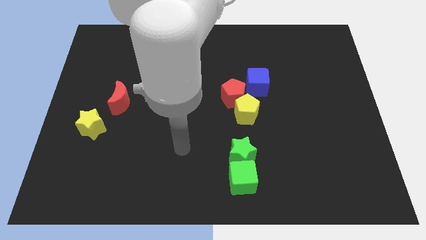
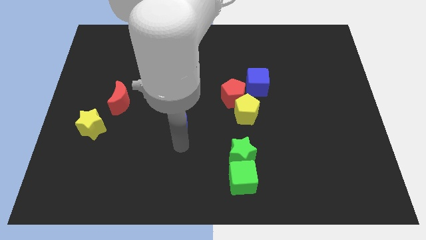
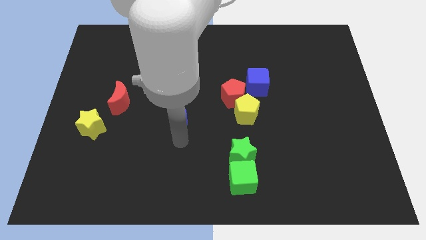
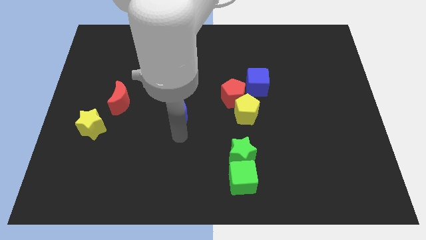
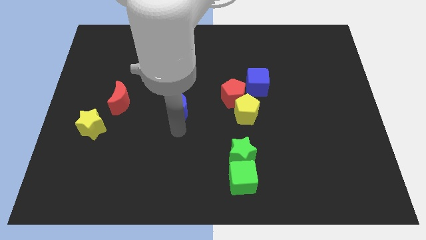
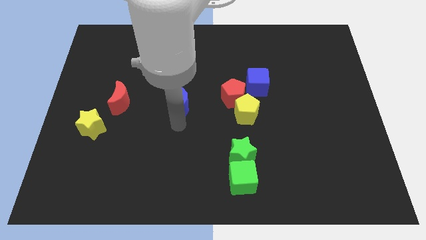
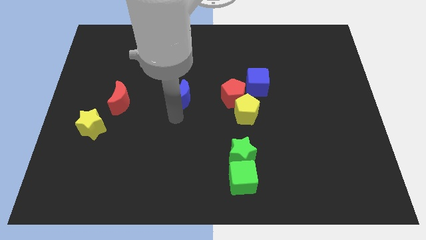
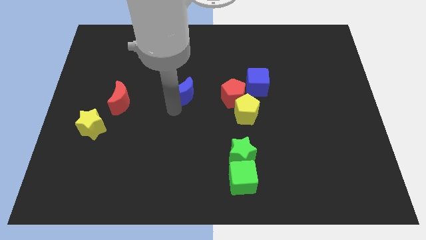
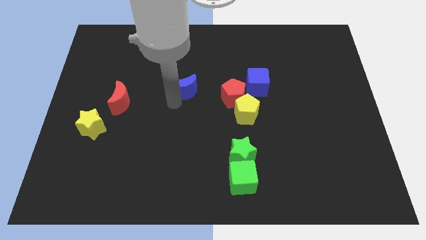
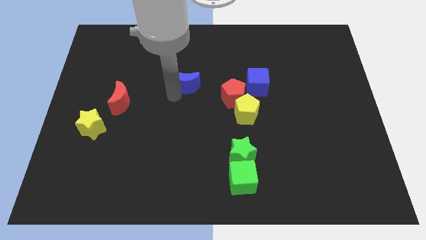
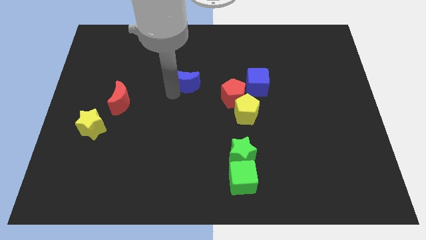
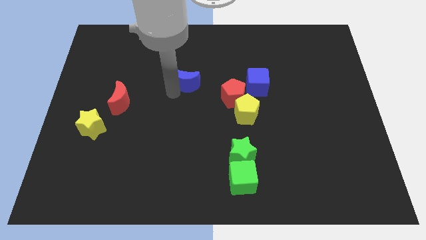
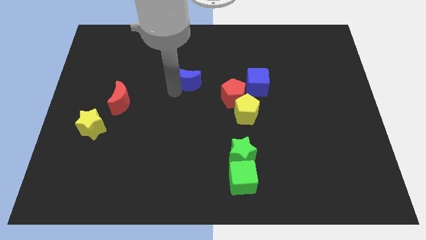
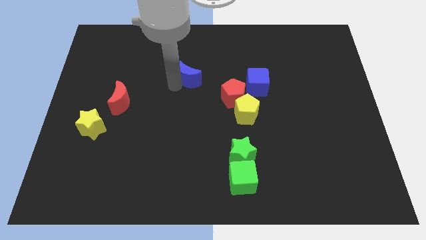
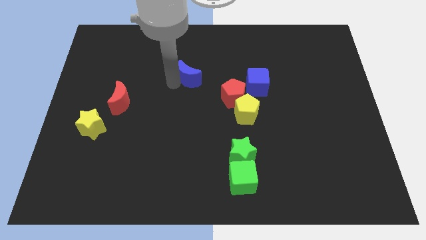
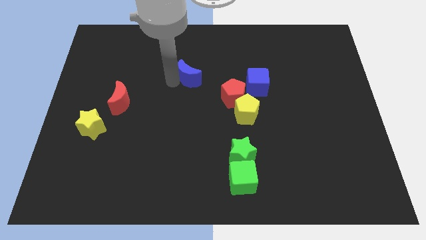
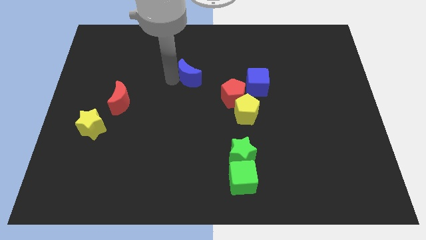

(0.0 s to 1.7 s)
move the blue crescent to the top

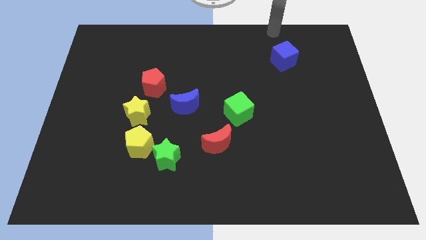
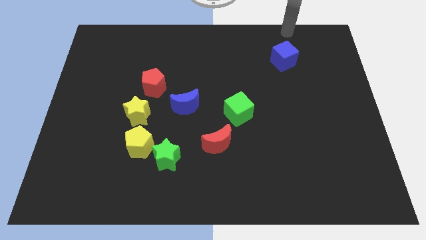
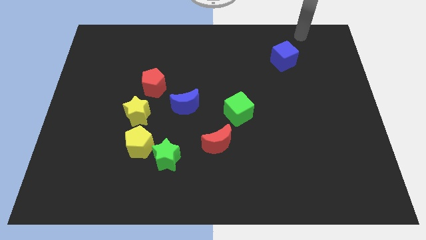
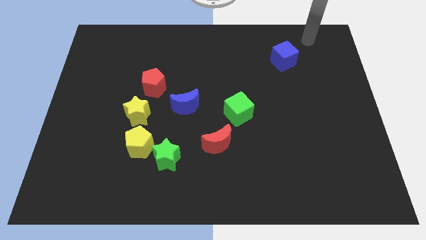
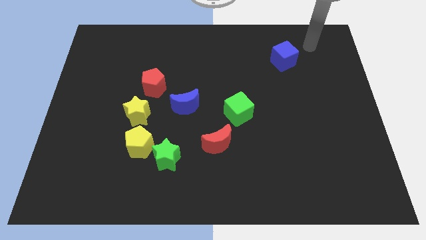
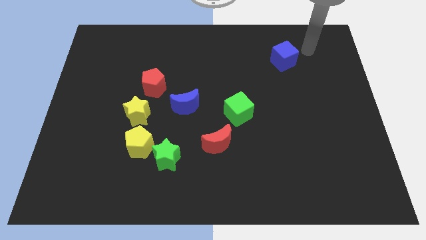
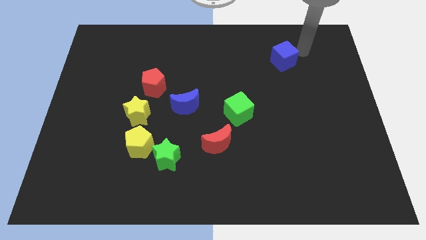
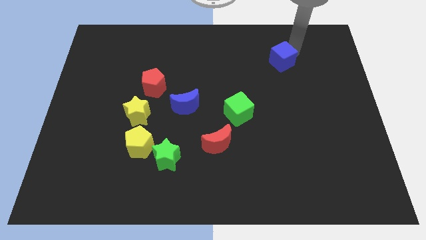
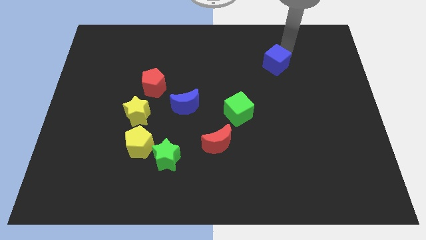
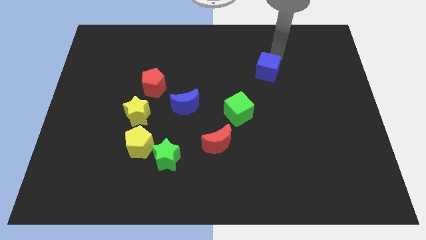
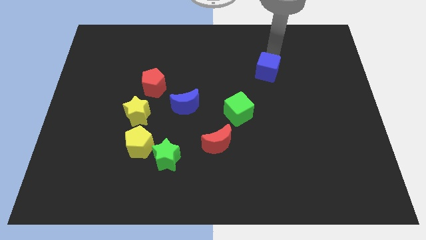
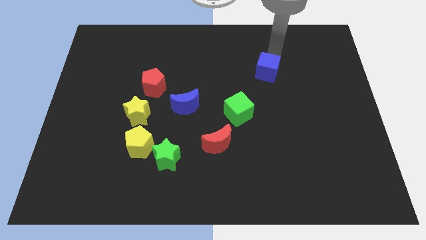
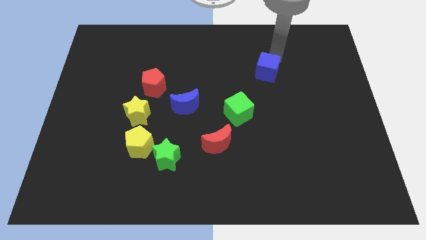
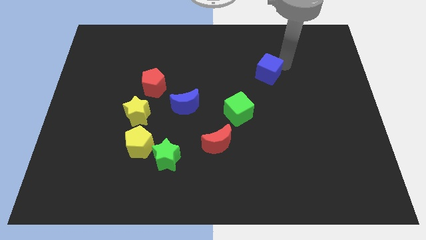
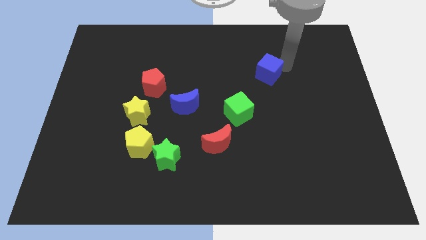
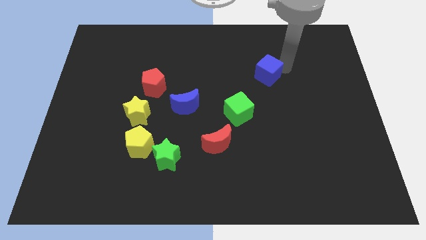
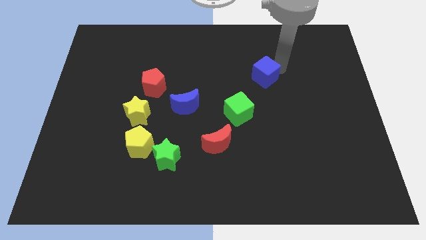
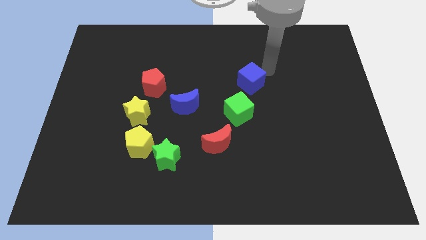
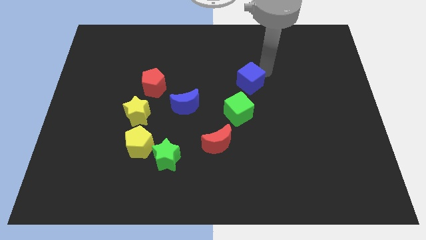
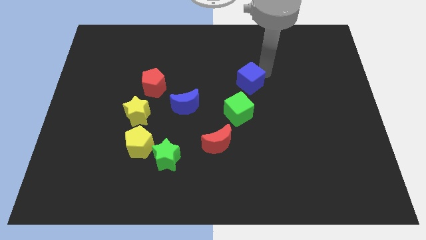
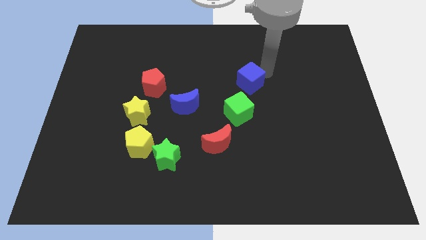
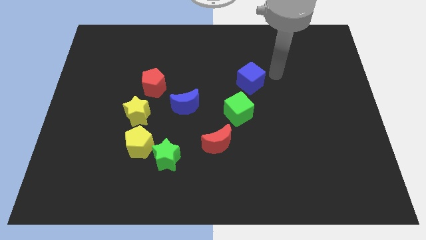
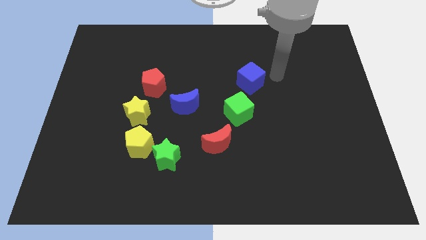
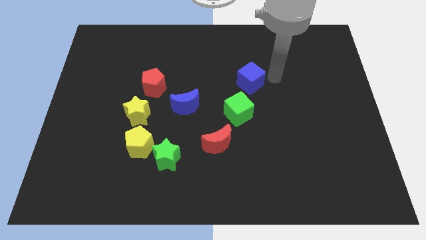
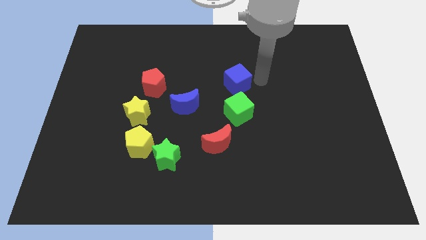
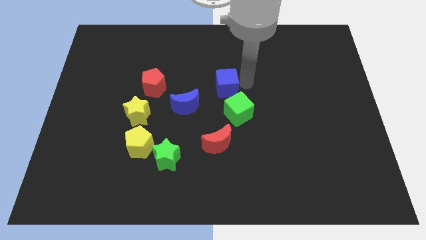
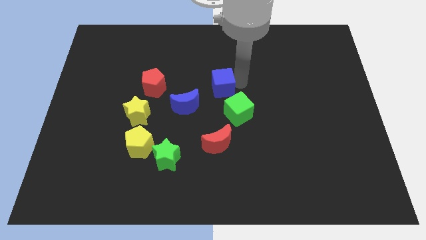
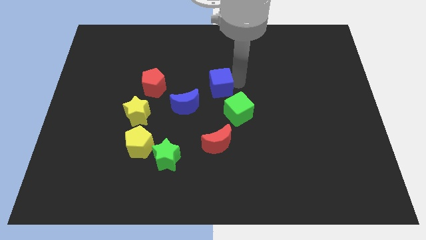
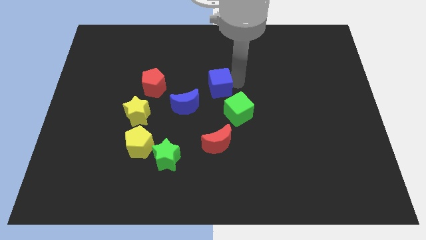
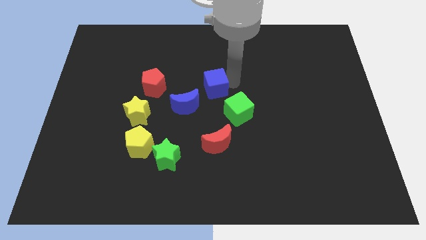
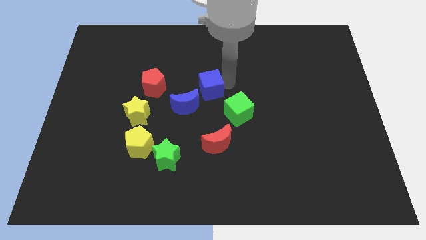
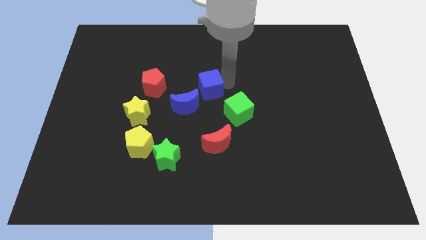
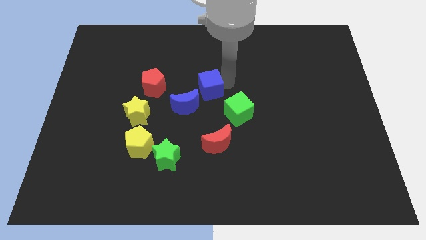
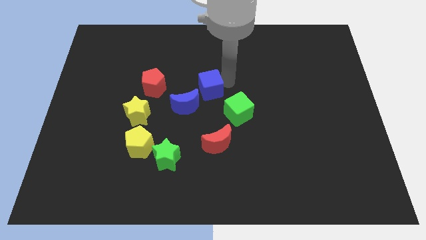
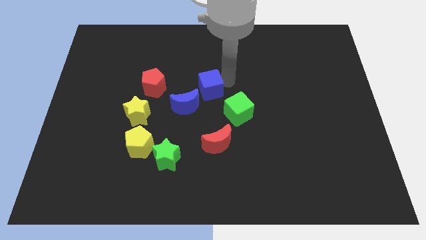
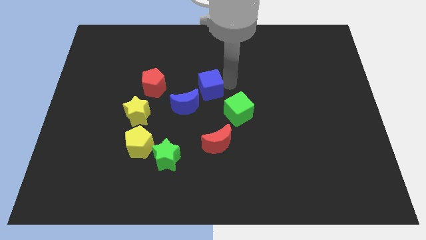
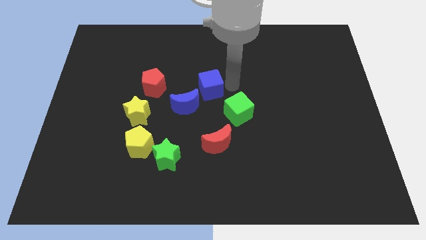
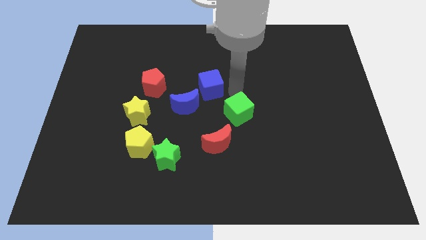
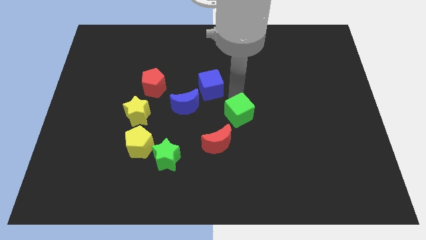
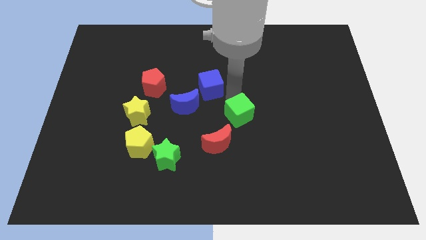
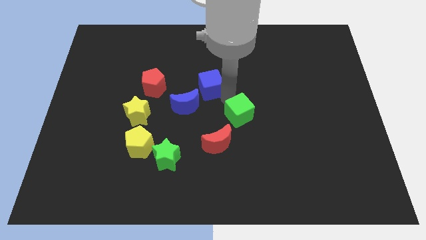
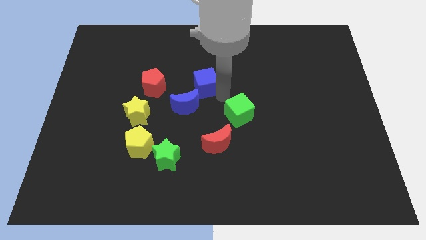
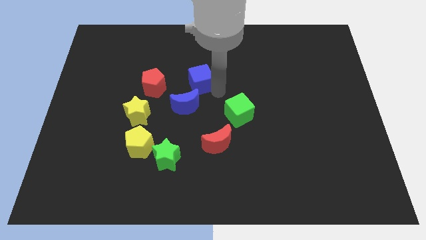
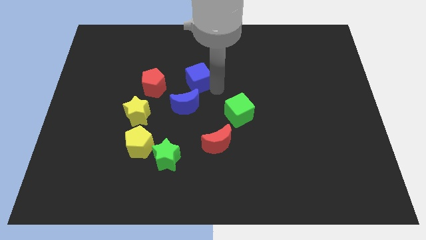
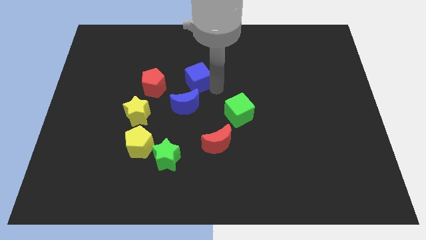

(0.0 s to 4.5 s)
move the blue cube to the top side of the blue moon

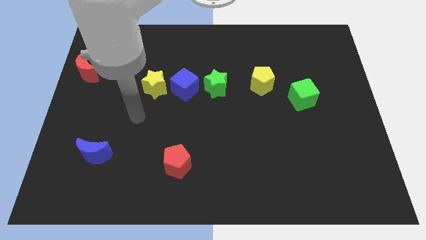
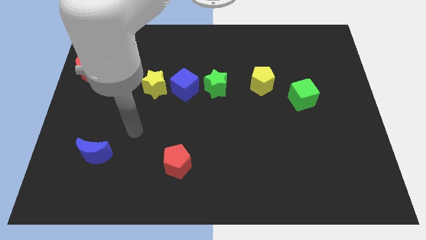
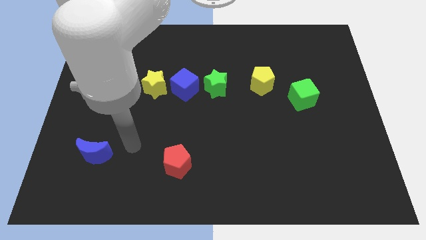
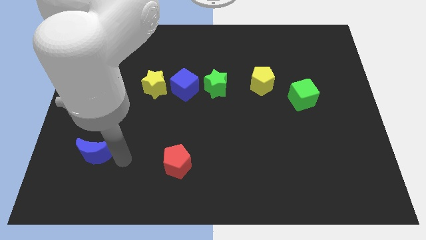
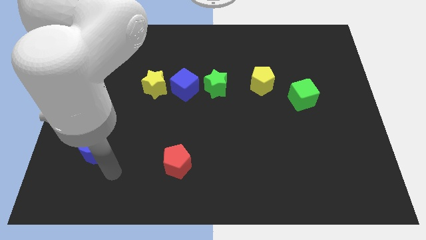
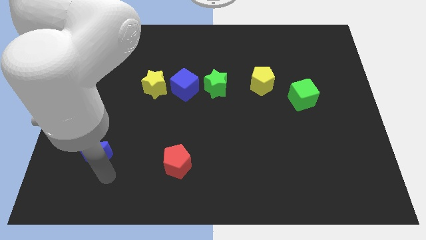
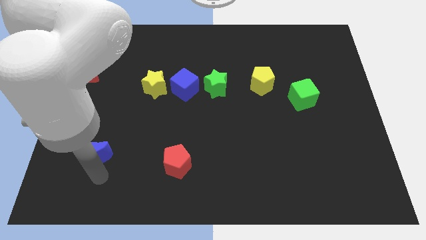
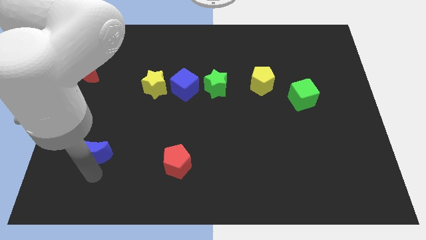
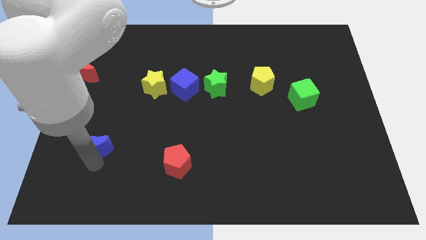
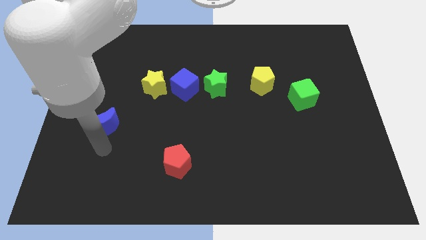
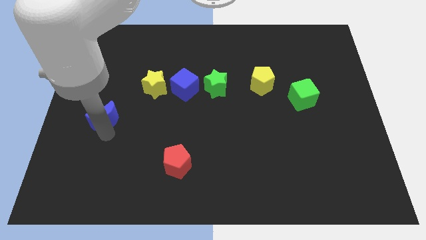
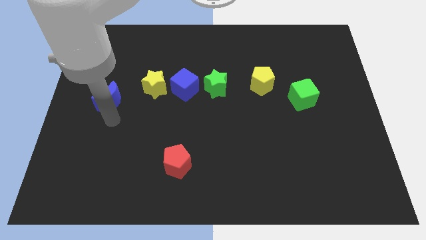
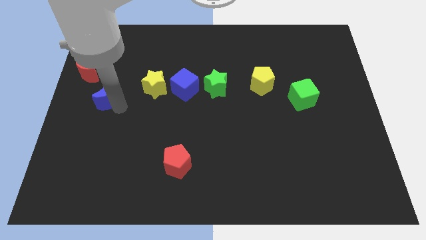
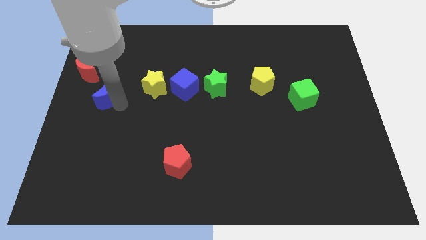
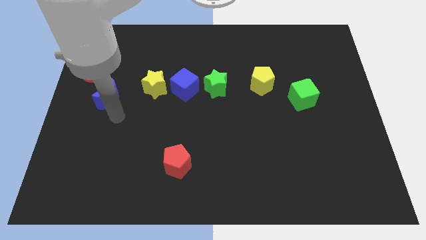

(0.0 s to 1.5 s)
push the blue moon diagonally top left to the red pentagon

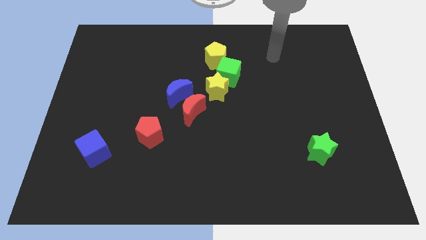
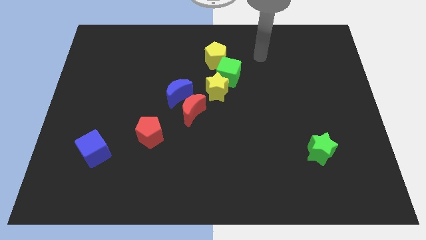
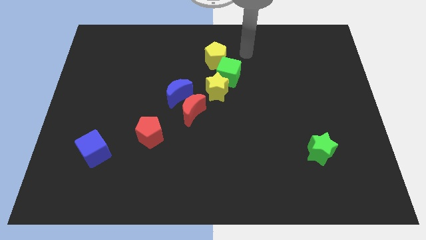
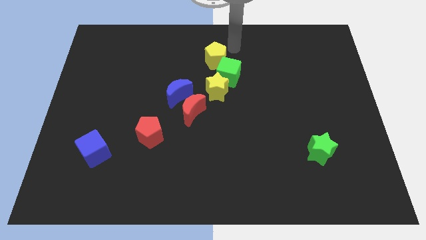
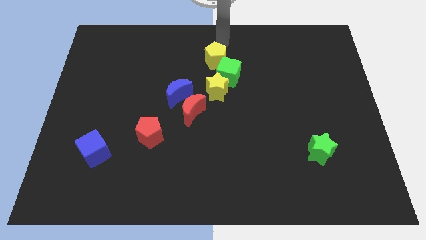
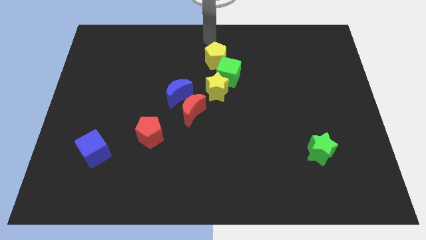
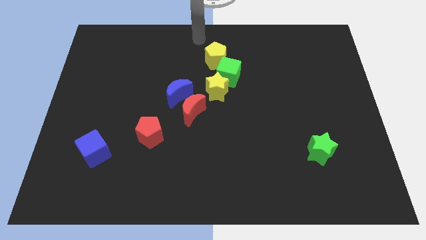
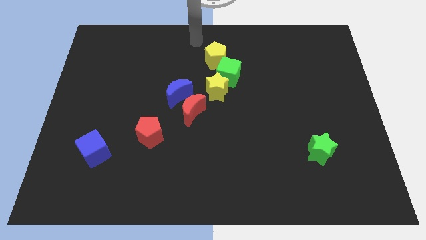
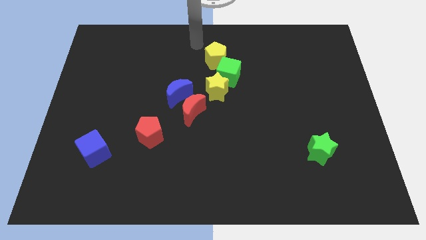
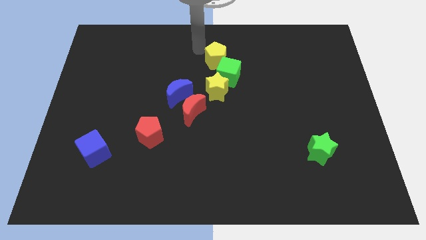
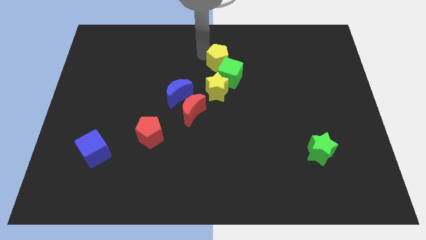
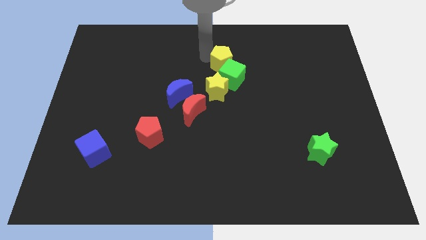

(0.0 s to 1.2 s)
move the yellow pentagon above the green cube

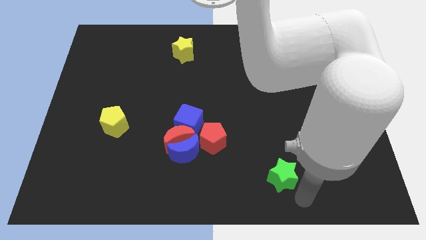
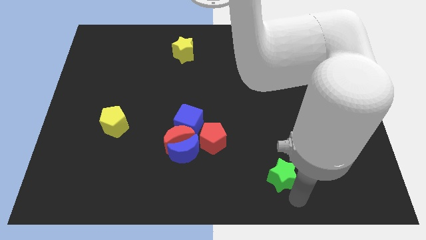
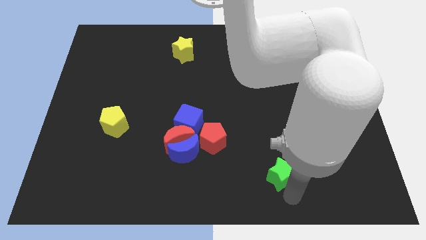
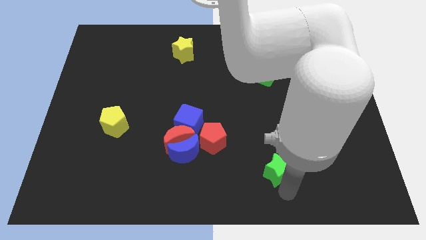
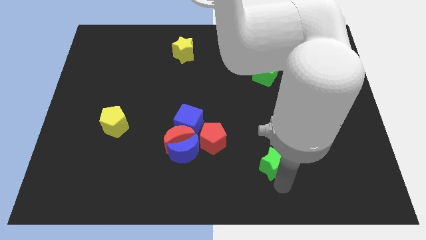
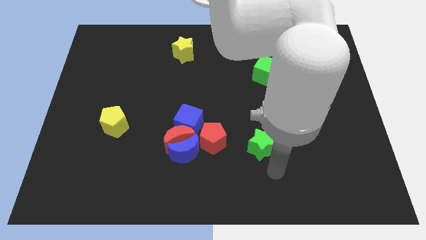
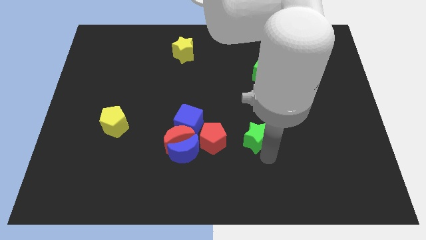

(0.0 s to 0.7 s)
move the green star right to red pentagon
